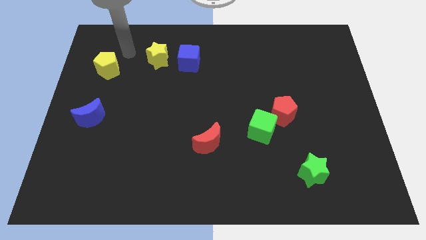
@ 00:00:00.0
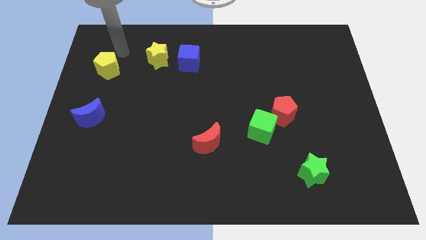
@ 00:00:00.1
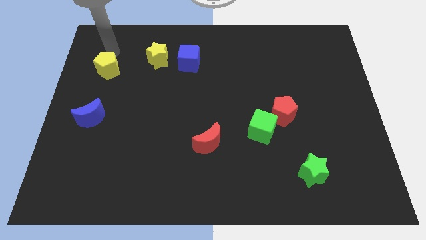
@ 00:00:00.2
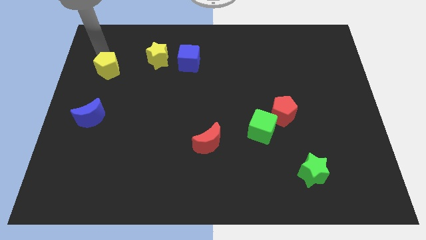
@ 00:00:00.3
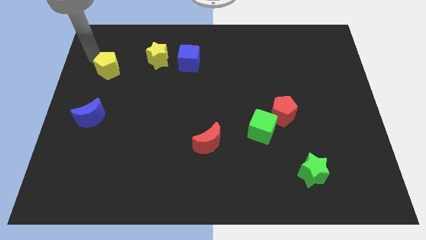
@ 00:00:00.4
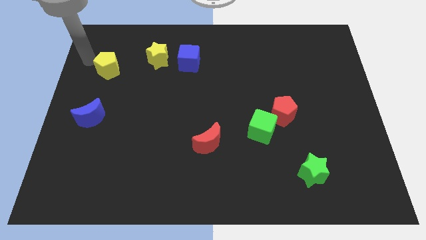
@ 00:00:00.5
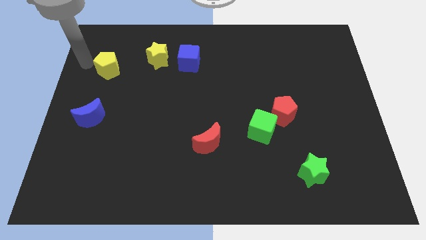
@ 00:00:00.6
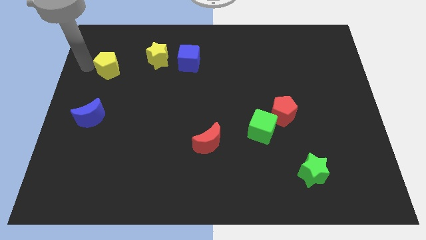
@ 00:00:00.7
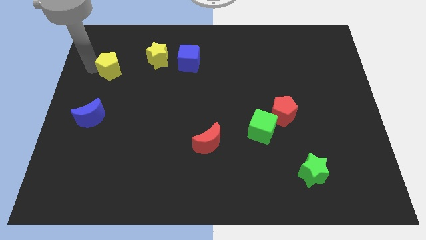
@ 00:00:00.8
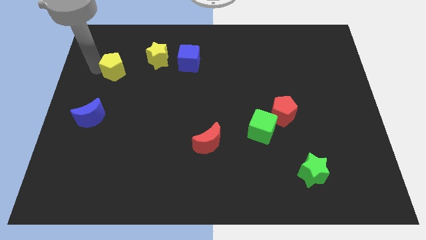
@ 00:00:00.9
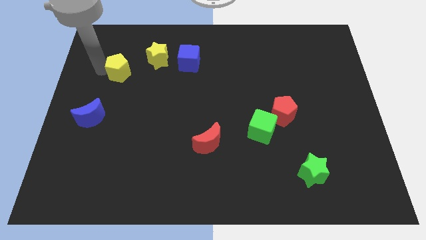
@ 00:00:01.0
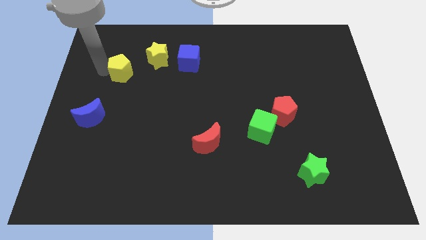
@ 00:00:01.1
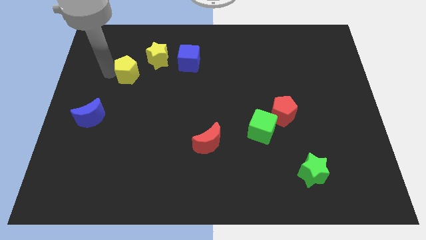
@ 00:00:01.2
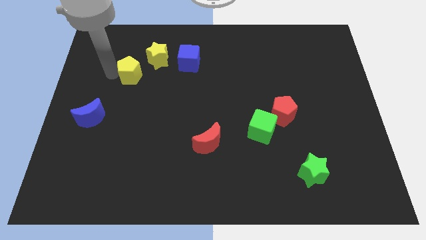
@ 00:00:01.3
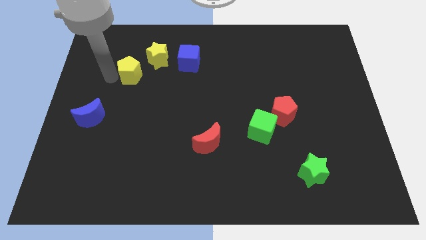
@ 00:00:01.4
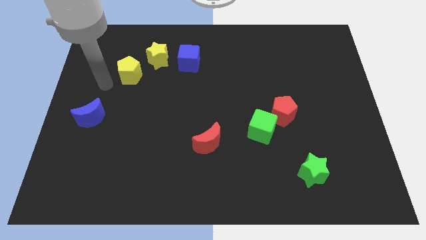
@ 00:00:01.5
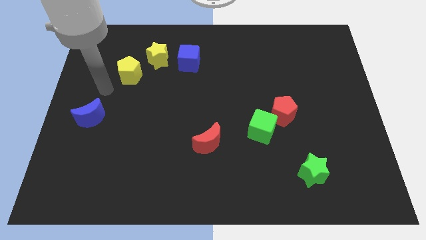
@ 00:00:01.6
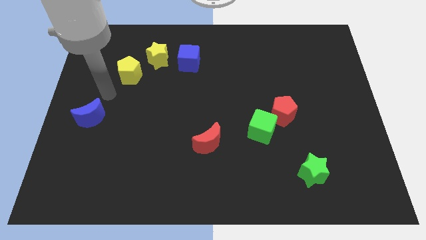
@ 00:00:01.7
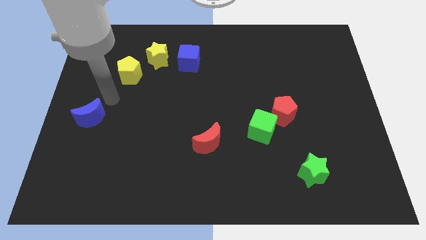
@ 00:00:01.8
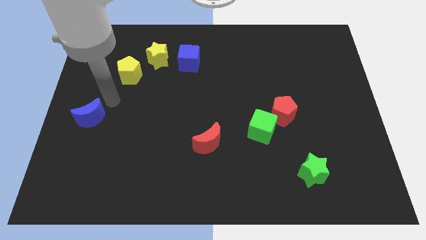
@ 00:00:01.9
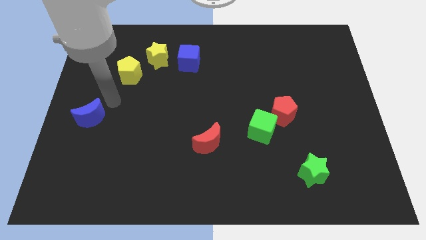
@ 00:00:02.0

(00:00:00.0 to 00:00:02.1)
drag the yellow pentagon diagonally top right to the blue moon

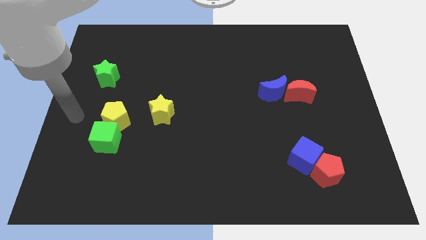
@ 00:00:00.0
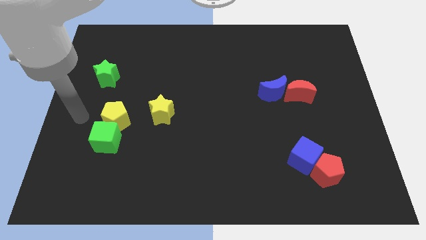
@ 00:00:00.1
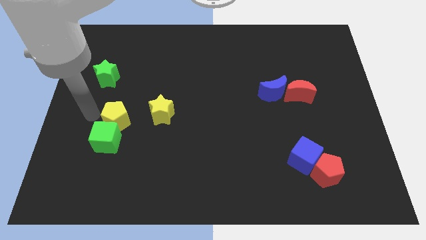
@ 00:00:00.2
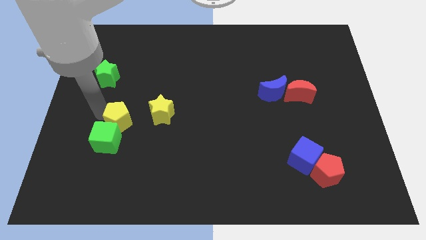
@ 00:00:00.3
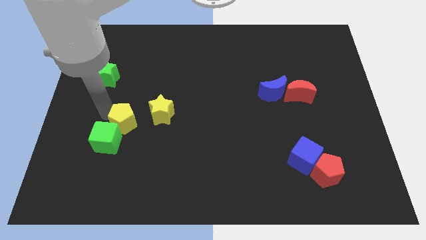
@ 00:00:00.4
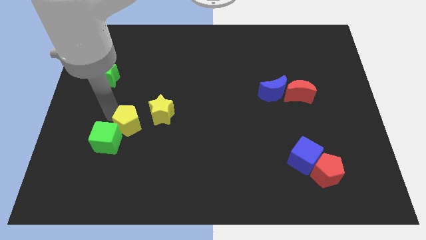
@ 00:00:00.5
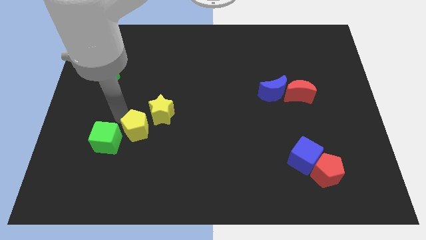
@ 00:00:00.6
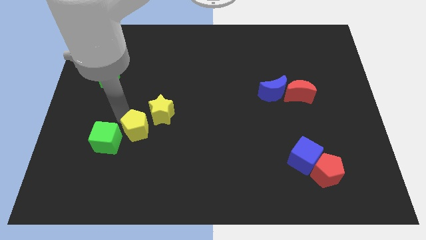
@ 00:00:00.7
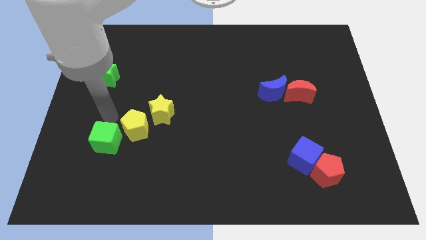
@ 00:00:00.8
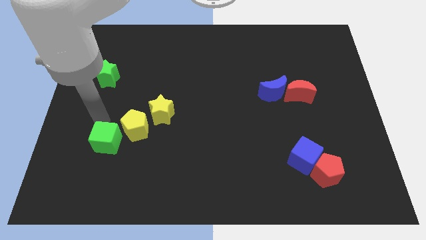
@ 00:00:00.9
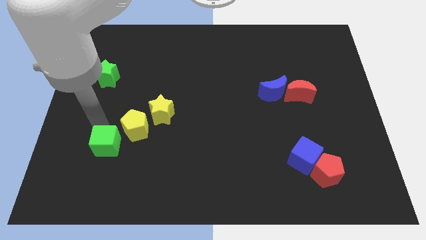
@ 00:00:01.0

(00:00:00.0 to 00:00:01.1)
place the yellow pentagon in between the green cube and yellow star

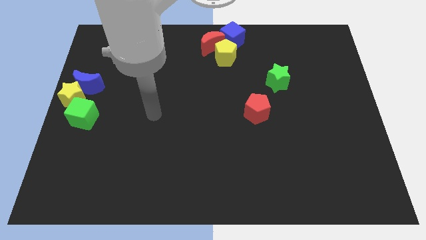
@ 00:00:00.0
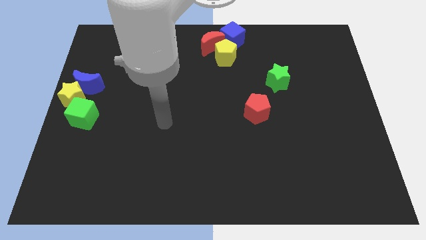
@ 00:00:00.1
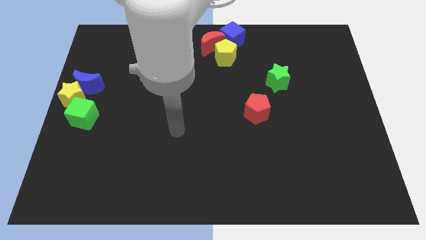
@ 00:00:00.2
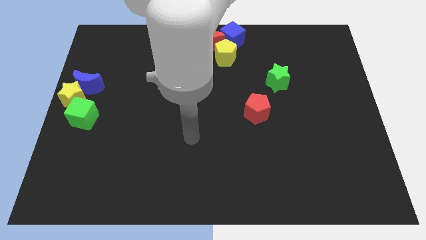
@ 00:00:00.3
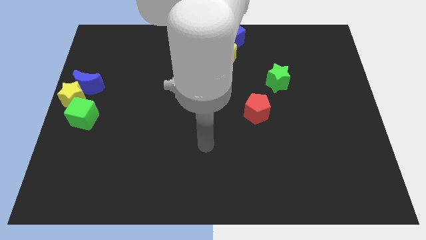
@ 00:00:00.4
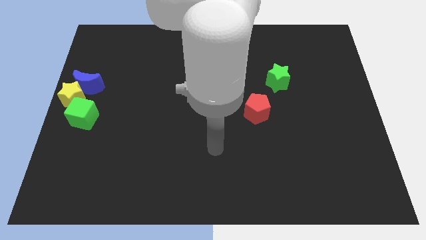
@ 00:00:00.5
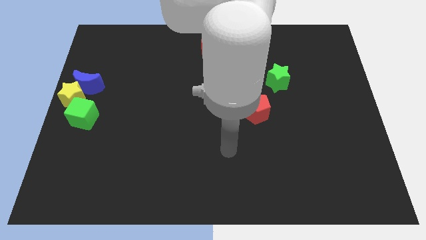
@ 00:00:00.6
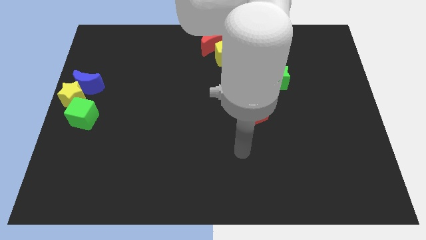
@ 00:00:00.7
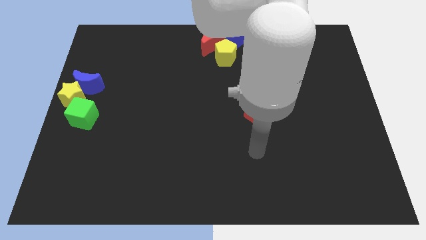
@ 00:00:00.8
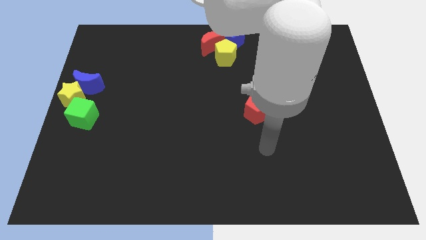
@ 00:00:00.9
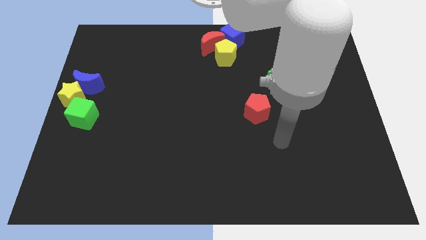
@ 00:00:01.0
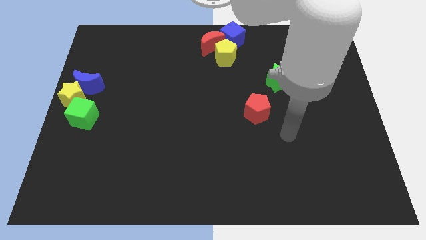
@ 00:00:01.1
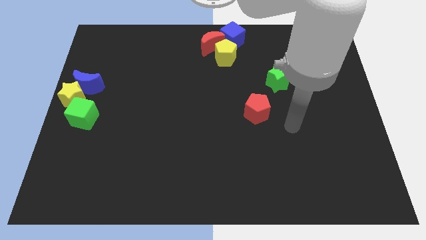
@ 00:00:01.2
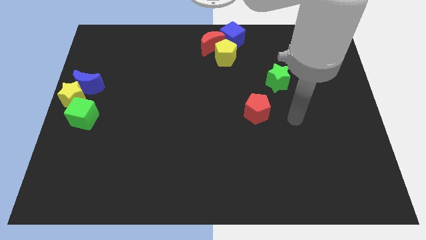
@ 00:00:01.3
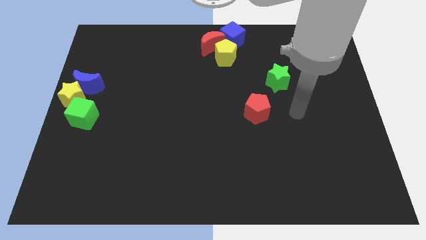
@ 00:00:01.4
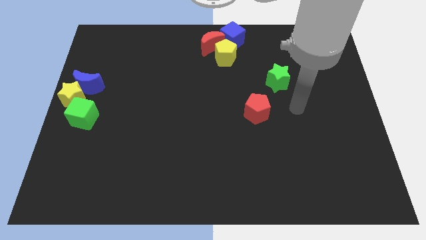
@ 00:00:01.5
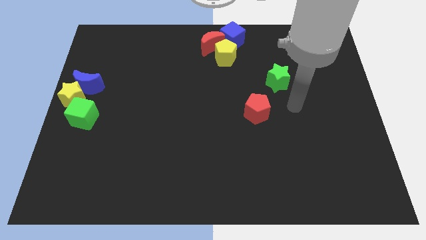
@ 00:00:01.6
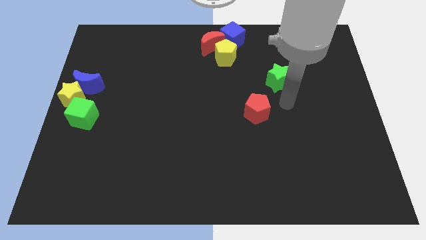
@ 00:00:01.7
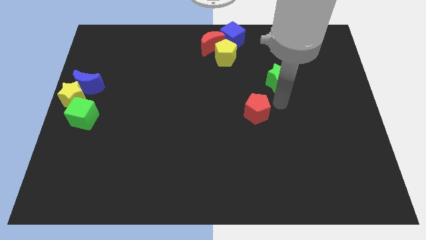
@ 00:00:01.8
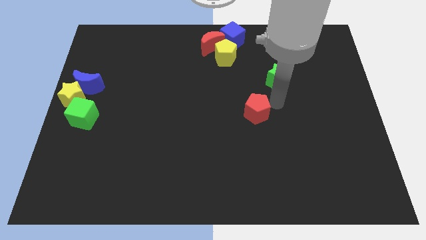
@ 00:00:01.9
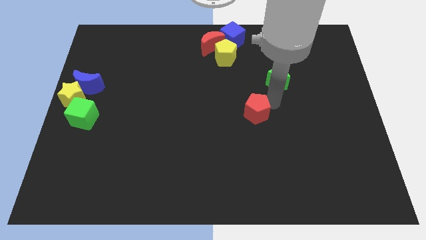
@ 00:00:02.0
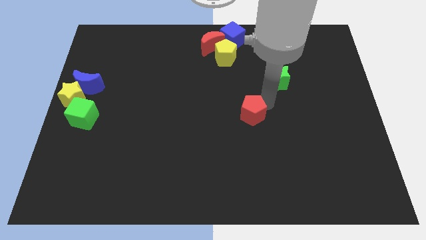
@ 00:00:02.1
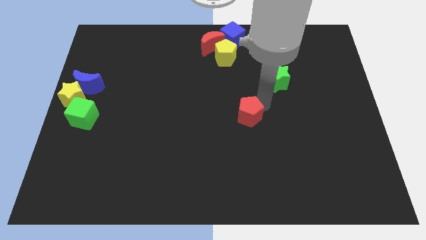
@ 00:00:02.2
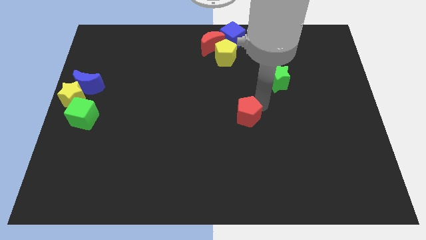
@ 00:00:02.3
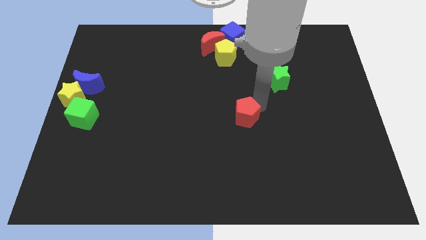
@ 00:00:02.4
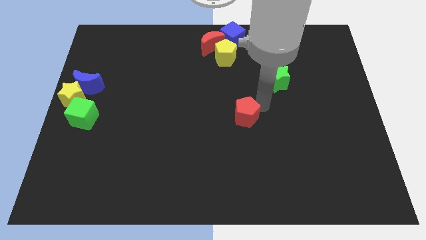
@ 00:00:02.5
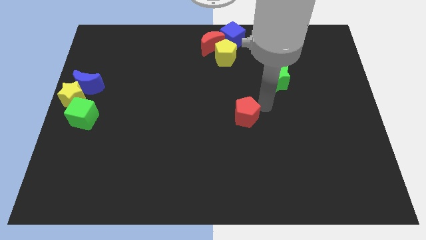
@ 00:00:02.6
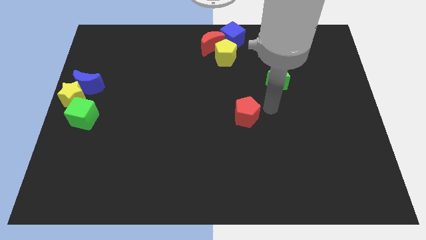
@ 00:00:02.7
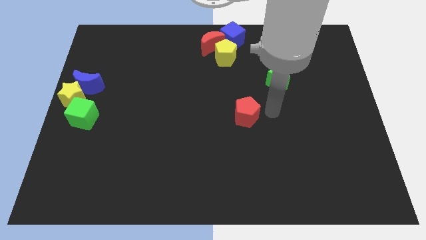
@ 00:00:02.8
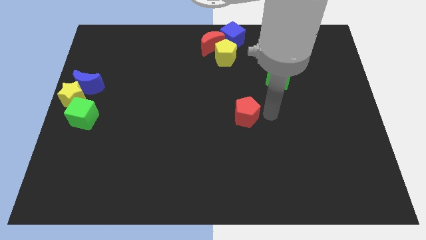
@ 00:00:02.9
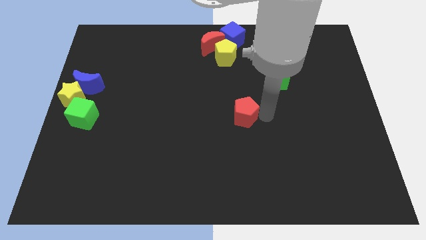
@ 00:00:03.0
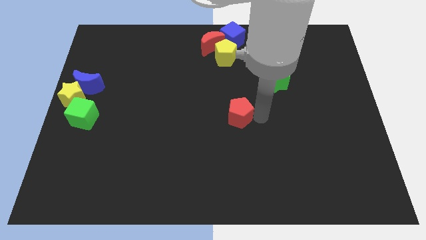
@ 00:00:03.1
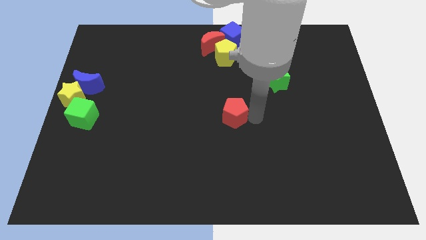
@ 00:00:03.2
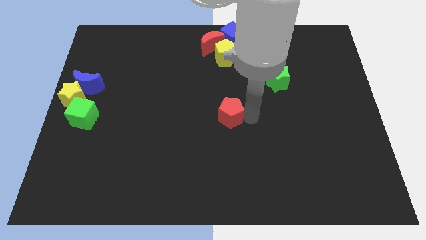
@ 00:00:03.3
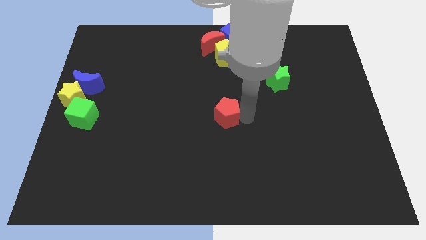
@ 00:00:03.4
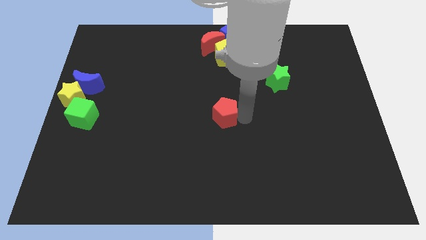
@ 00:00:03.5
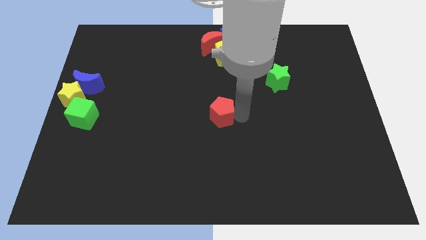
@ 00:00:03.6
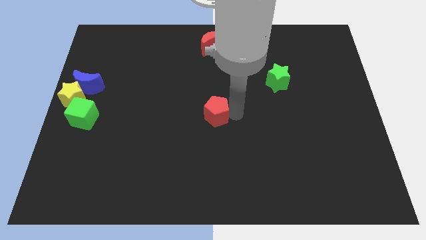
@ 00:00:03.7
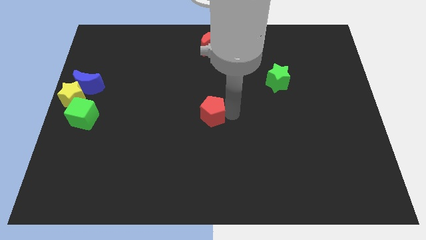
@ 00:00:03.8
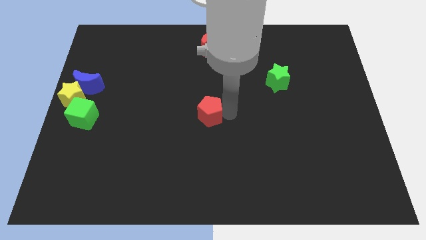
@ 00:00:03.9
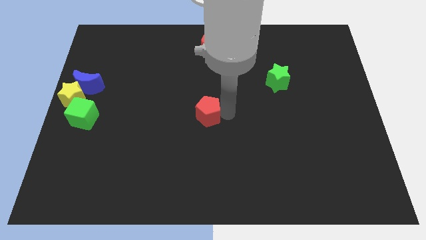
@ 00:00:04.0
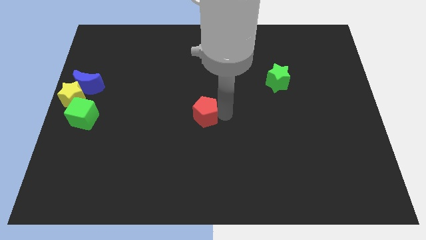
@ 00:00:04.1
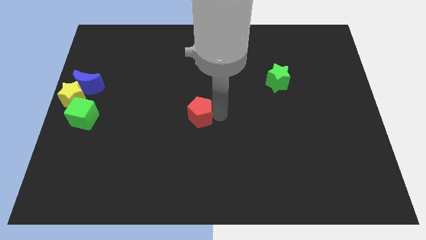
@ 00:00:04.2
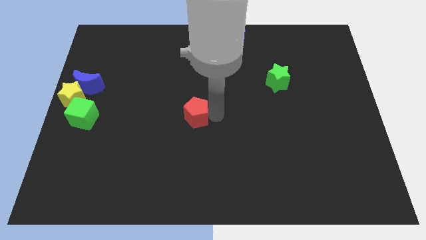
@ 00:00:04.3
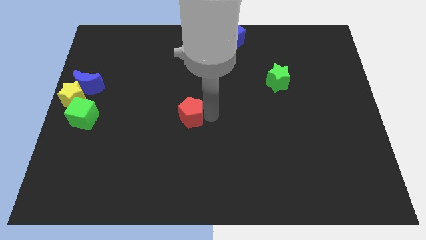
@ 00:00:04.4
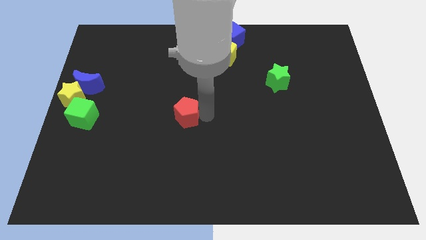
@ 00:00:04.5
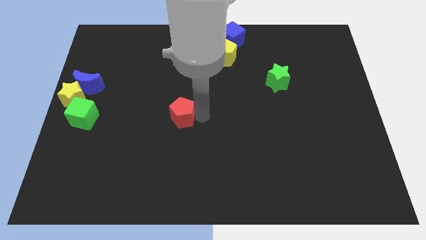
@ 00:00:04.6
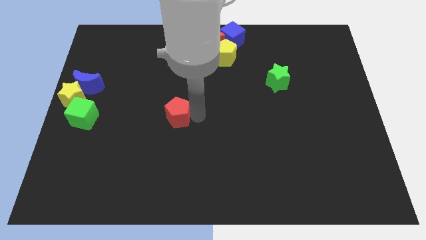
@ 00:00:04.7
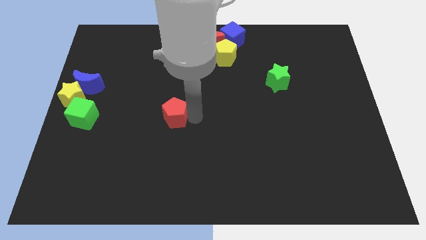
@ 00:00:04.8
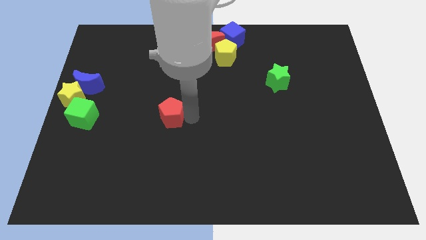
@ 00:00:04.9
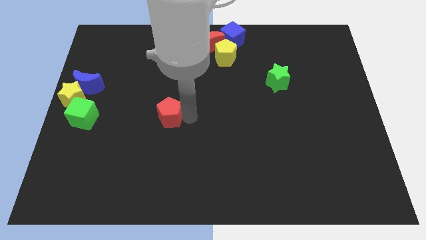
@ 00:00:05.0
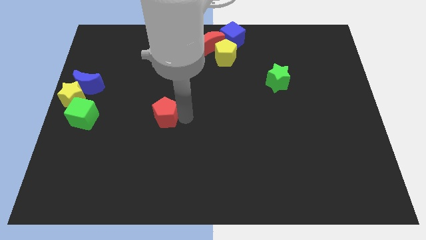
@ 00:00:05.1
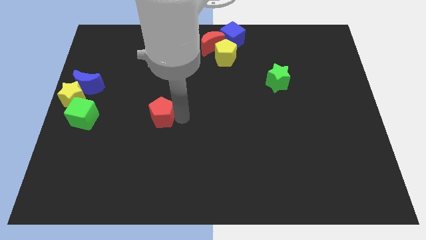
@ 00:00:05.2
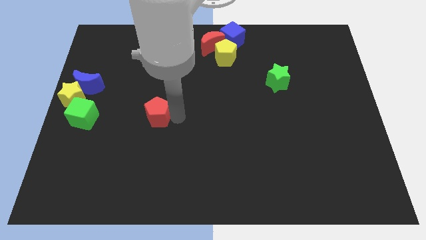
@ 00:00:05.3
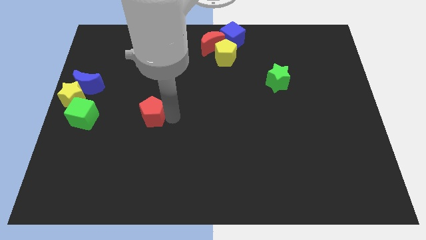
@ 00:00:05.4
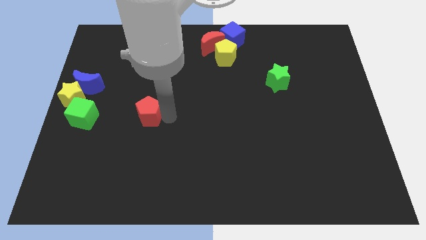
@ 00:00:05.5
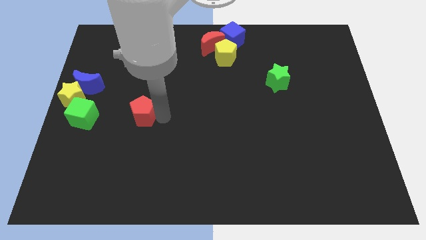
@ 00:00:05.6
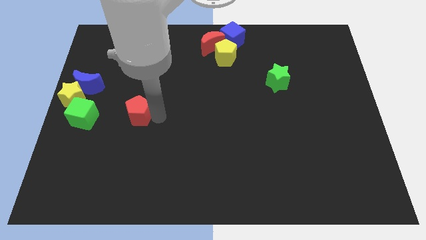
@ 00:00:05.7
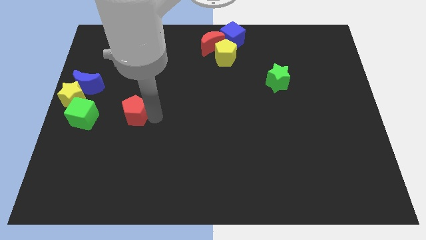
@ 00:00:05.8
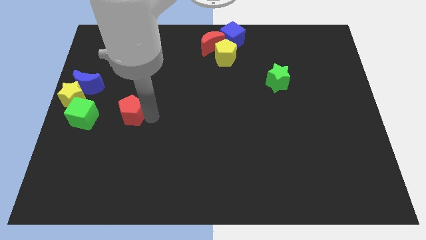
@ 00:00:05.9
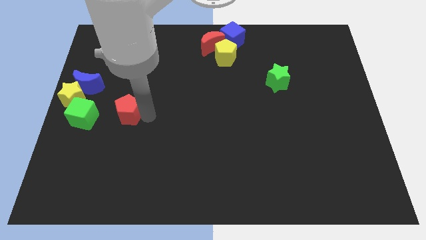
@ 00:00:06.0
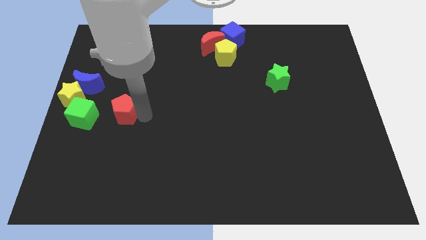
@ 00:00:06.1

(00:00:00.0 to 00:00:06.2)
place the red pentagon to the right of the green cube
